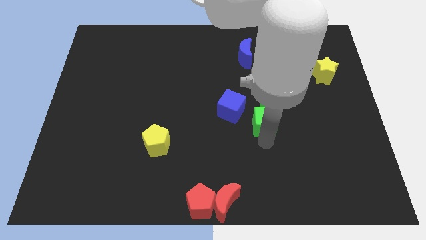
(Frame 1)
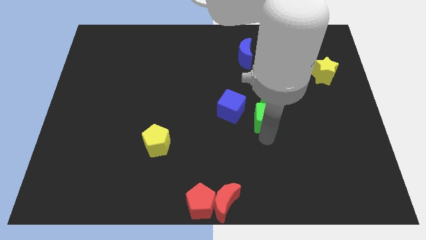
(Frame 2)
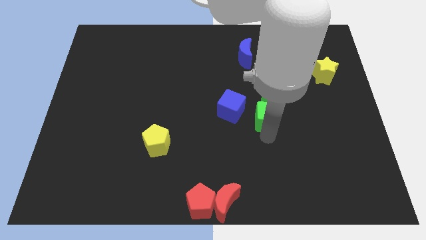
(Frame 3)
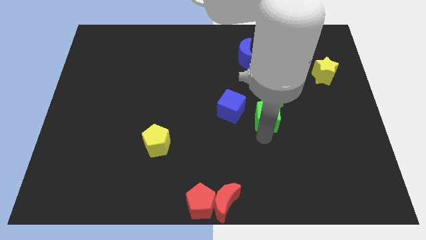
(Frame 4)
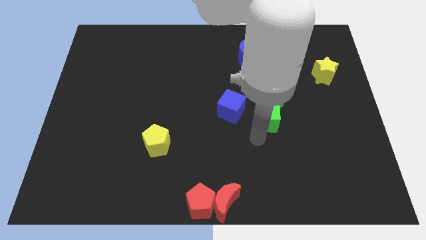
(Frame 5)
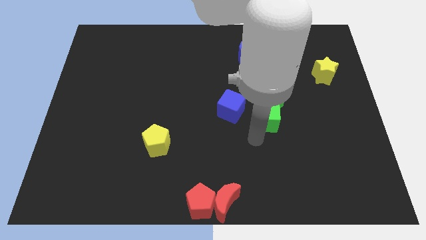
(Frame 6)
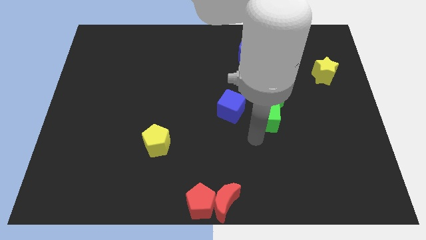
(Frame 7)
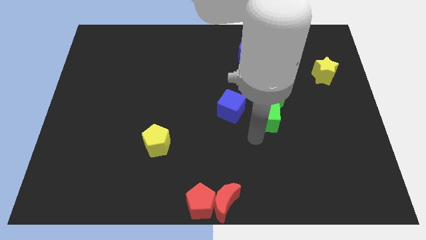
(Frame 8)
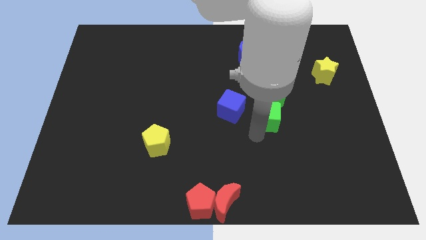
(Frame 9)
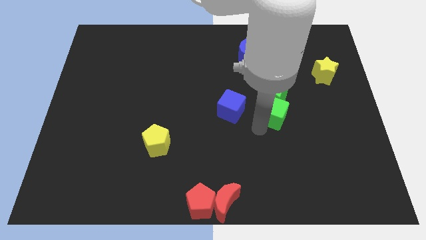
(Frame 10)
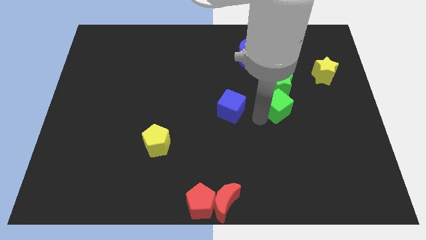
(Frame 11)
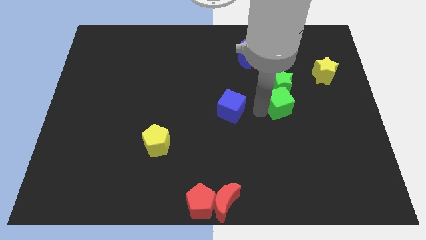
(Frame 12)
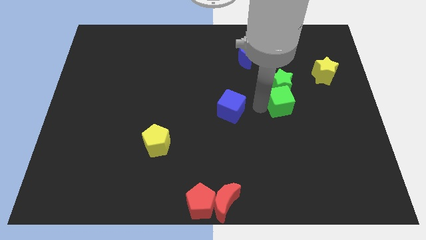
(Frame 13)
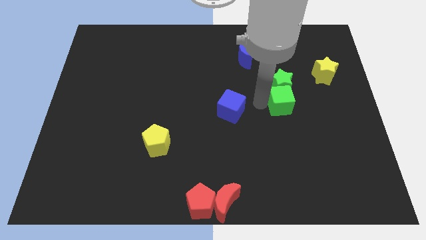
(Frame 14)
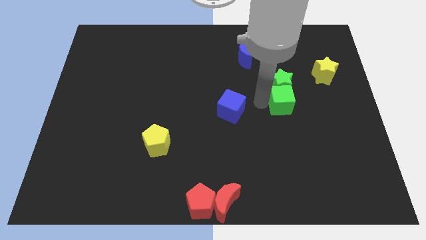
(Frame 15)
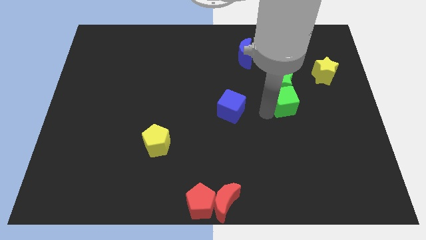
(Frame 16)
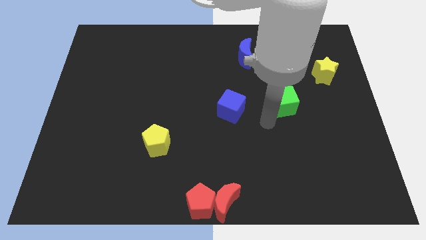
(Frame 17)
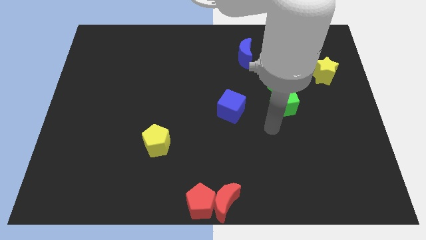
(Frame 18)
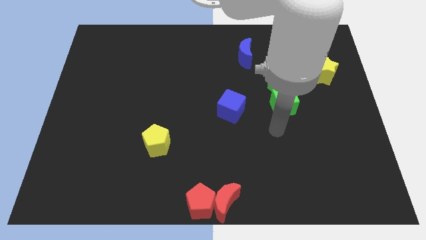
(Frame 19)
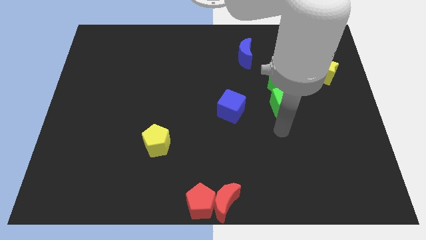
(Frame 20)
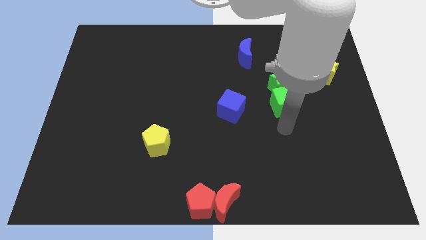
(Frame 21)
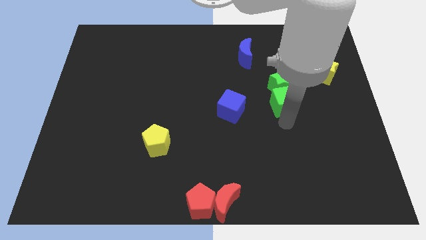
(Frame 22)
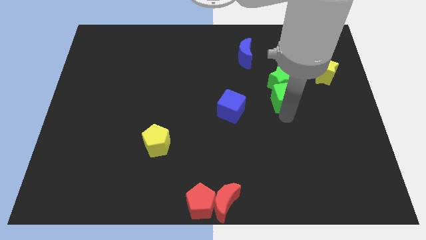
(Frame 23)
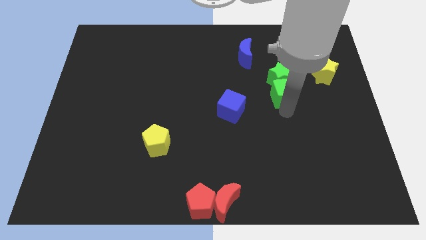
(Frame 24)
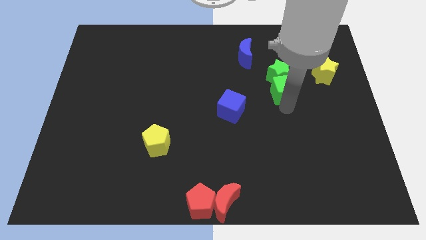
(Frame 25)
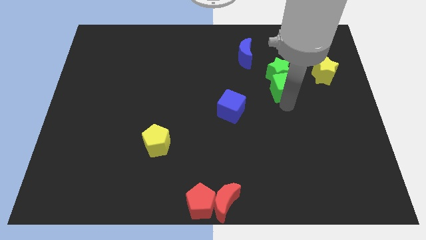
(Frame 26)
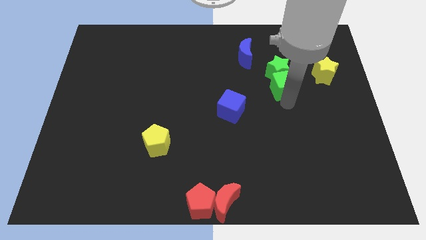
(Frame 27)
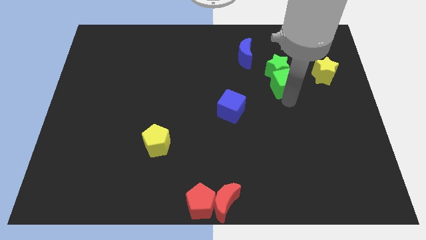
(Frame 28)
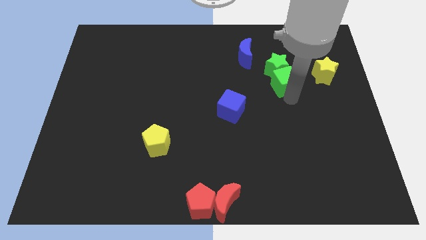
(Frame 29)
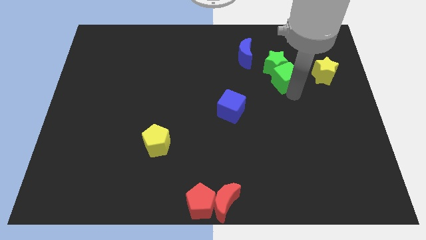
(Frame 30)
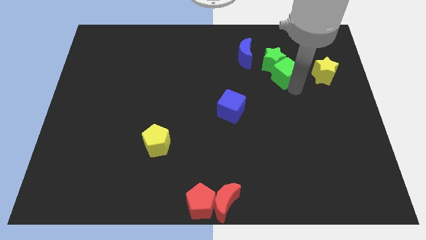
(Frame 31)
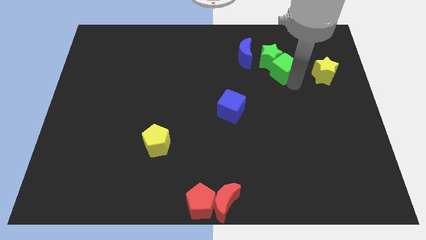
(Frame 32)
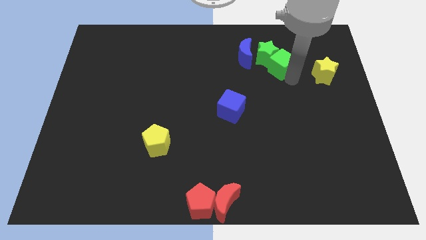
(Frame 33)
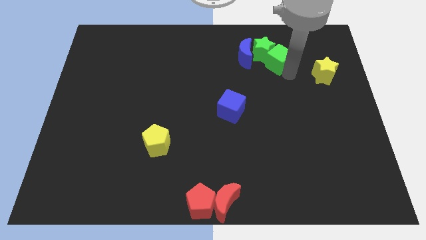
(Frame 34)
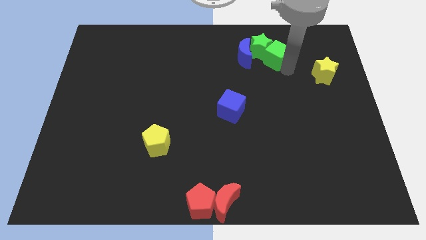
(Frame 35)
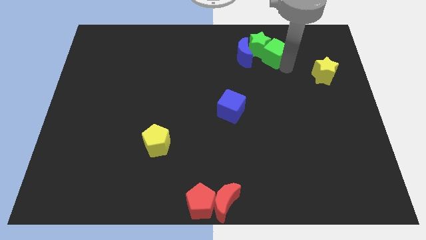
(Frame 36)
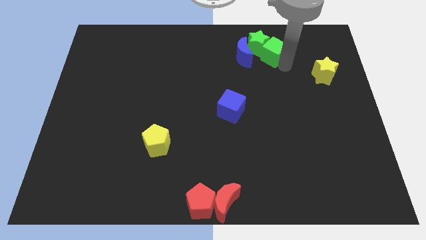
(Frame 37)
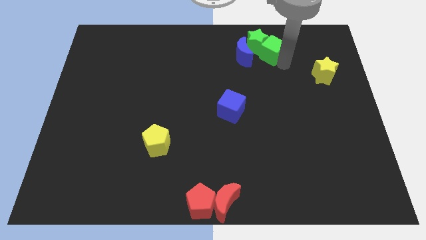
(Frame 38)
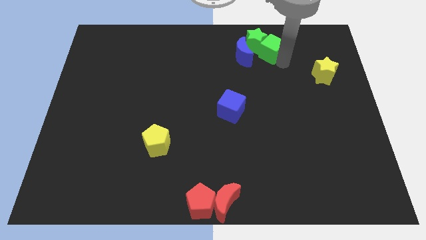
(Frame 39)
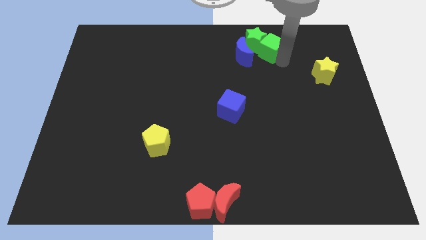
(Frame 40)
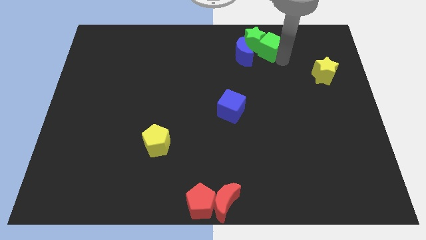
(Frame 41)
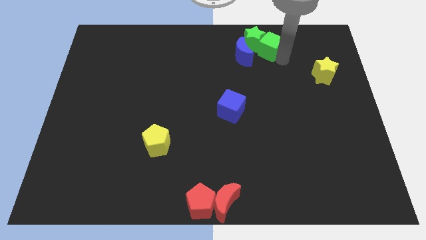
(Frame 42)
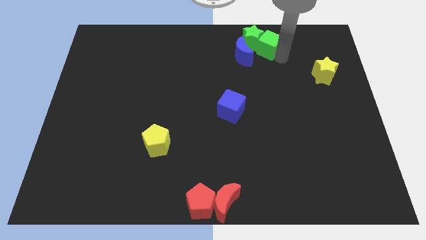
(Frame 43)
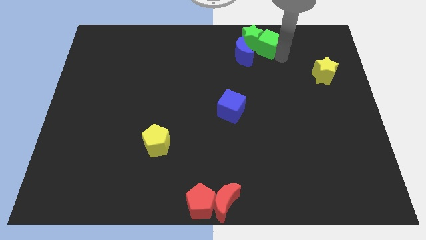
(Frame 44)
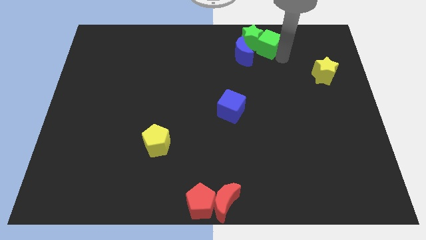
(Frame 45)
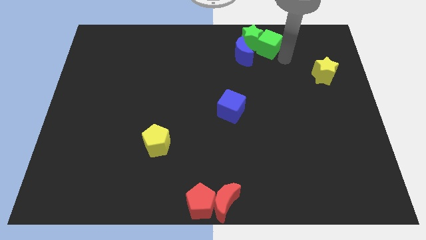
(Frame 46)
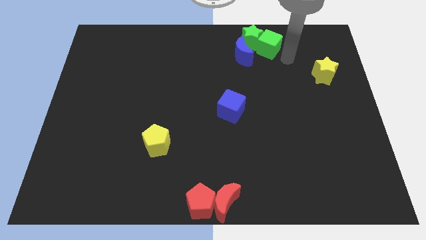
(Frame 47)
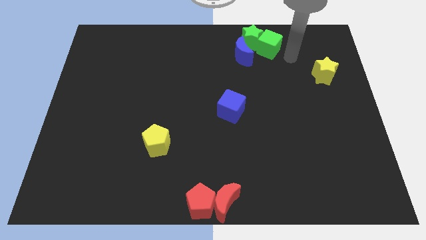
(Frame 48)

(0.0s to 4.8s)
push the green blocks to the top center

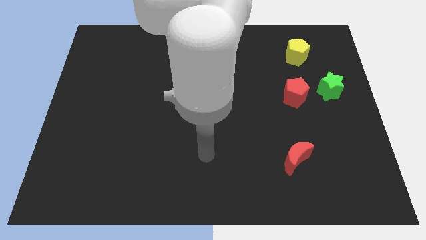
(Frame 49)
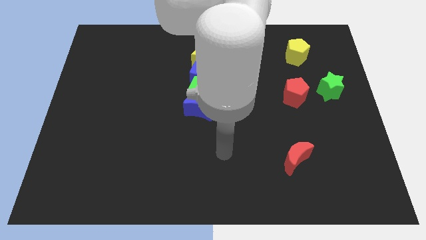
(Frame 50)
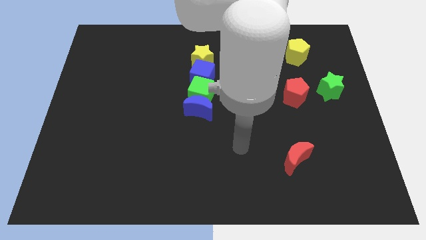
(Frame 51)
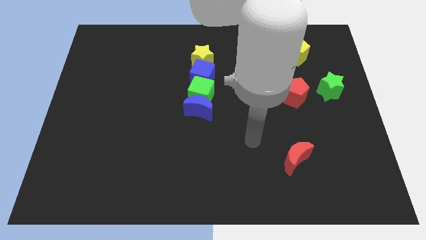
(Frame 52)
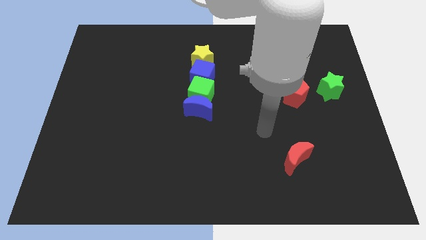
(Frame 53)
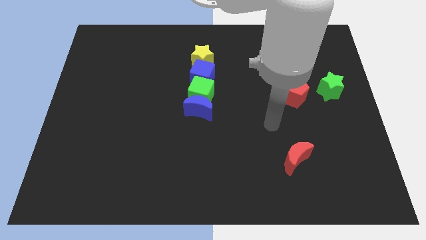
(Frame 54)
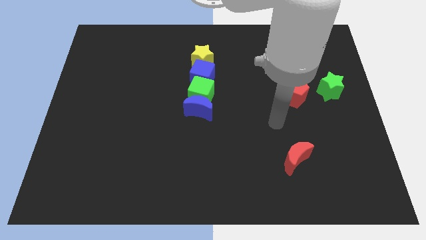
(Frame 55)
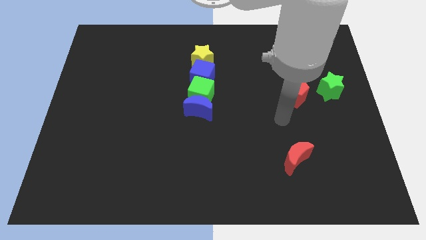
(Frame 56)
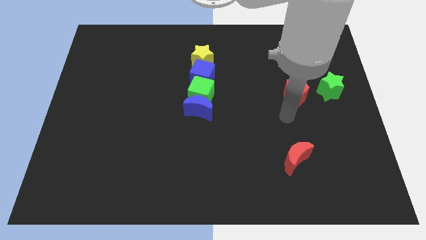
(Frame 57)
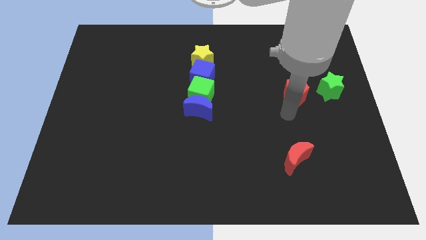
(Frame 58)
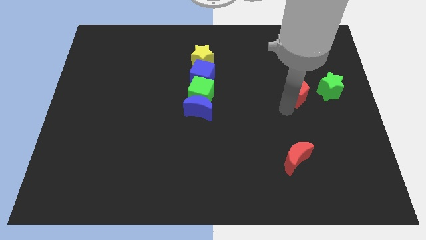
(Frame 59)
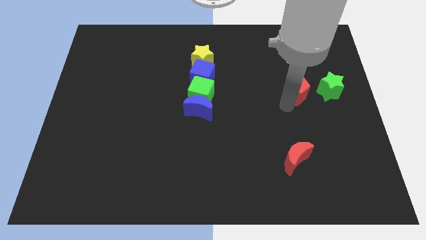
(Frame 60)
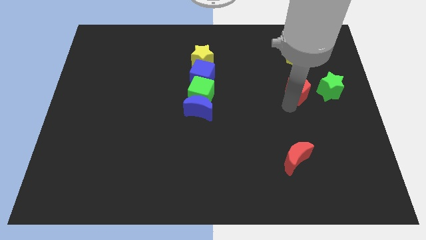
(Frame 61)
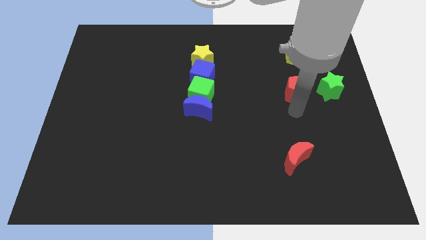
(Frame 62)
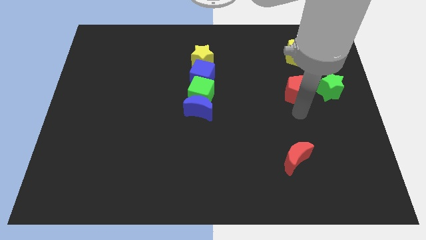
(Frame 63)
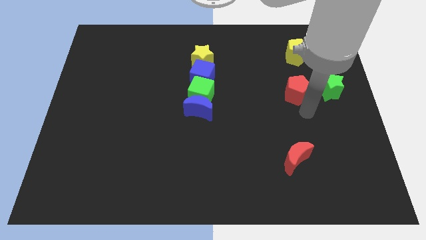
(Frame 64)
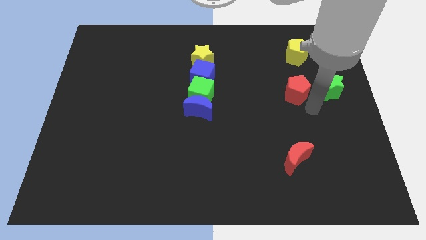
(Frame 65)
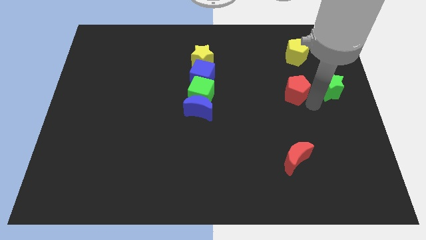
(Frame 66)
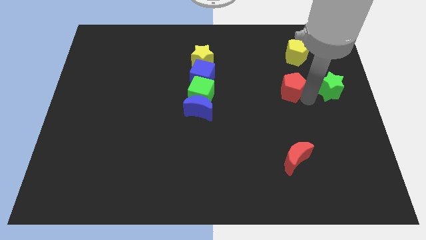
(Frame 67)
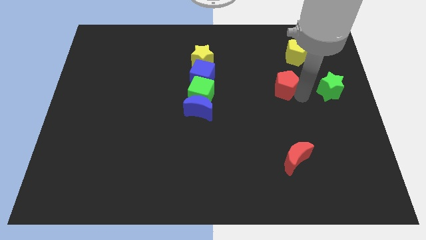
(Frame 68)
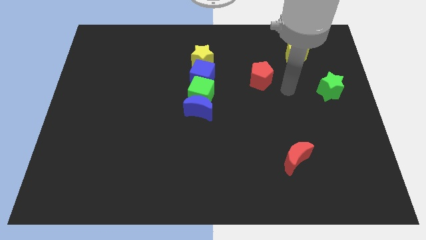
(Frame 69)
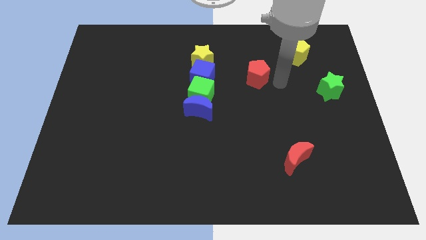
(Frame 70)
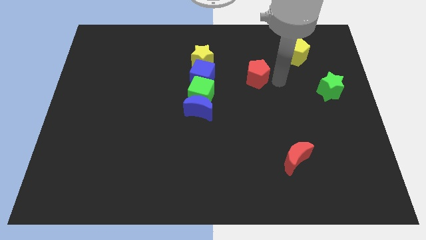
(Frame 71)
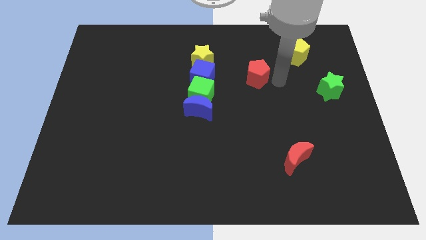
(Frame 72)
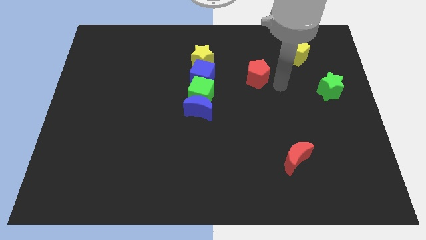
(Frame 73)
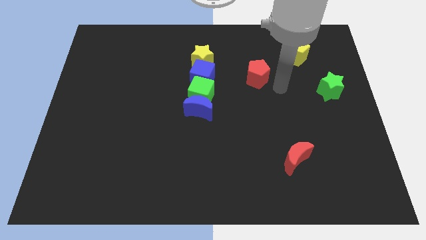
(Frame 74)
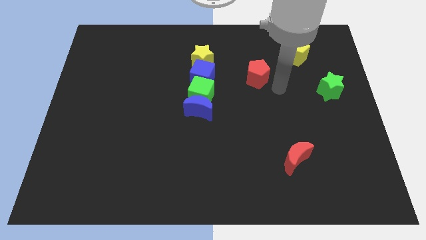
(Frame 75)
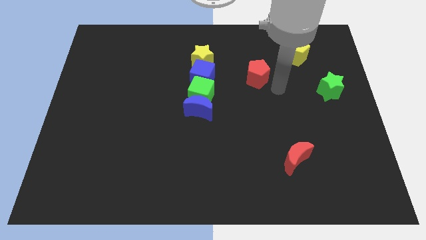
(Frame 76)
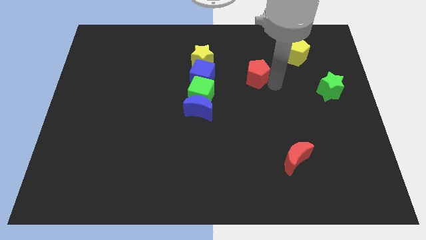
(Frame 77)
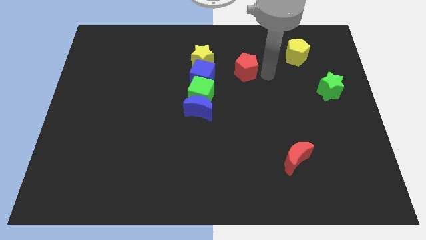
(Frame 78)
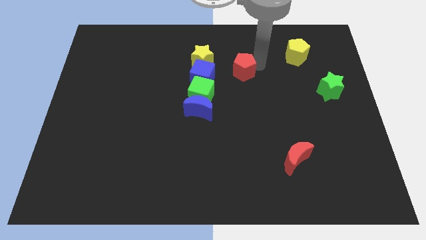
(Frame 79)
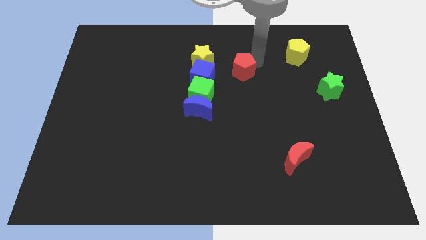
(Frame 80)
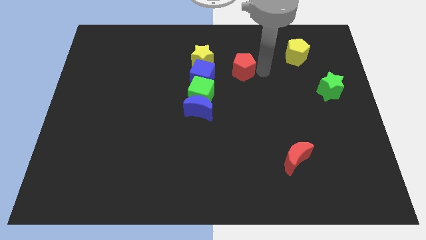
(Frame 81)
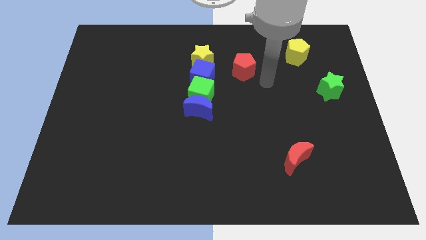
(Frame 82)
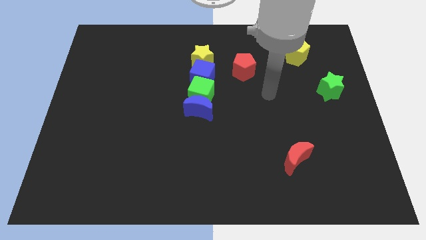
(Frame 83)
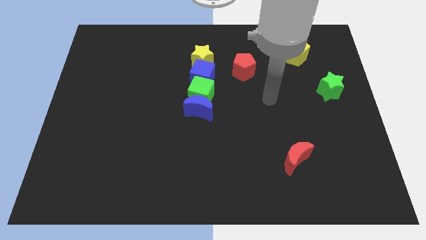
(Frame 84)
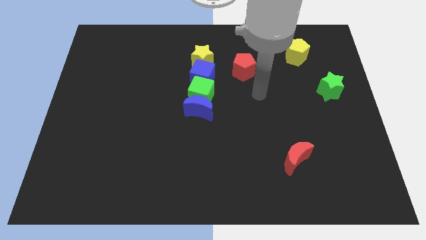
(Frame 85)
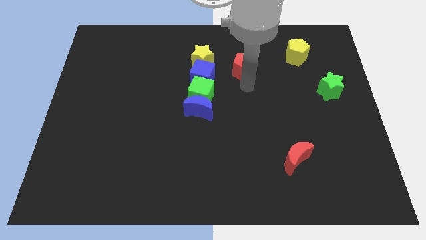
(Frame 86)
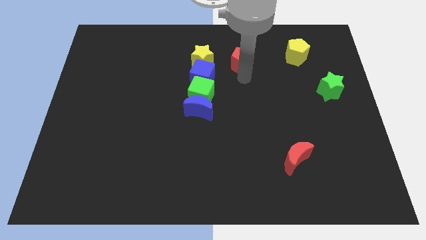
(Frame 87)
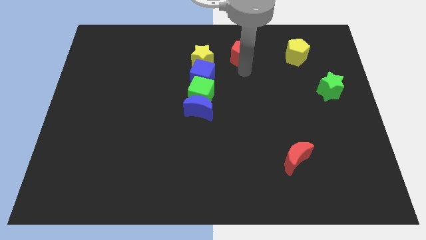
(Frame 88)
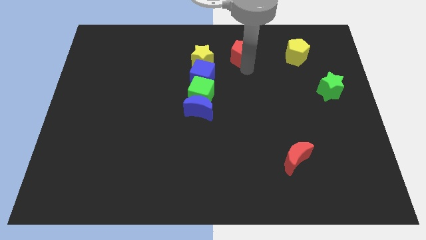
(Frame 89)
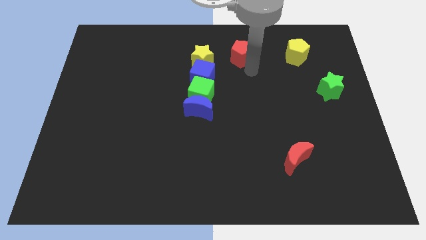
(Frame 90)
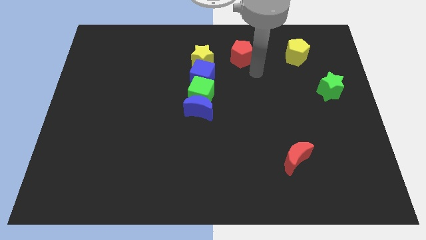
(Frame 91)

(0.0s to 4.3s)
place the red pentagon right to the yellow star
